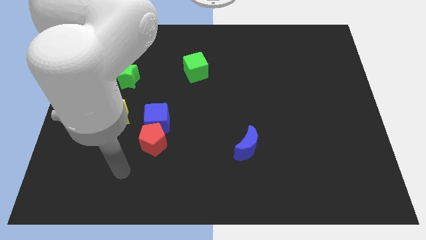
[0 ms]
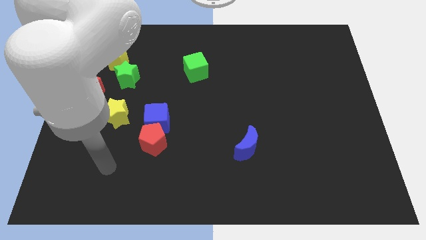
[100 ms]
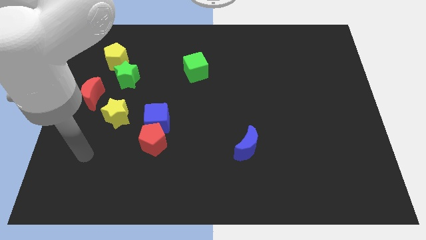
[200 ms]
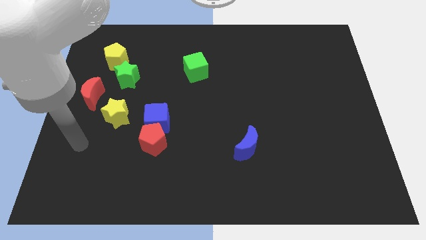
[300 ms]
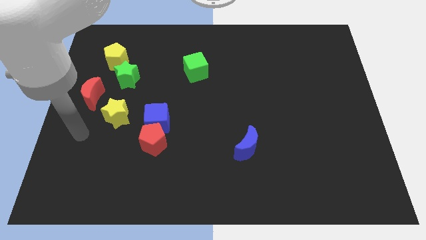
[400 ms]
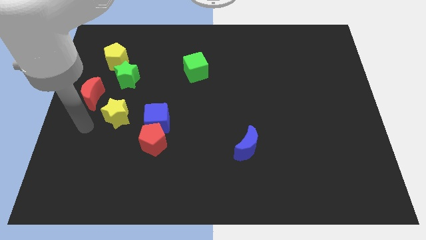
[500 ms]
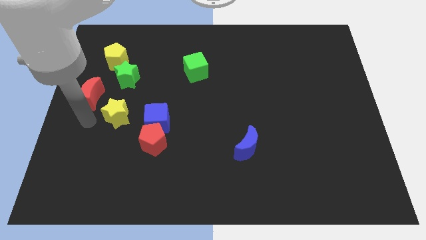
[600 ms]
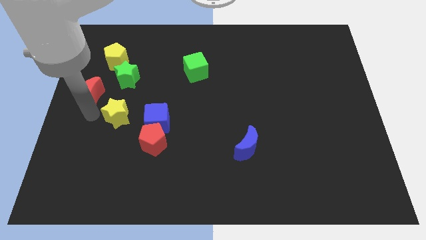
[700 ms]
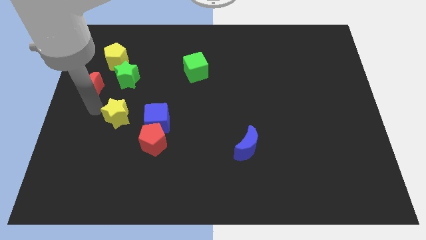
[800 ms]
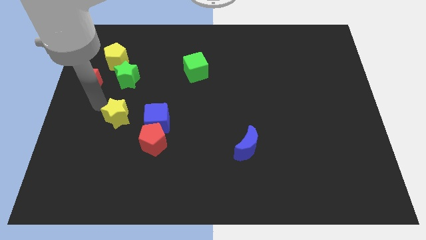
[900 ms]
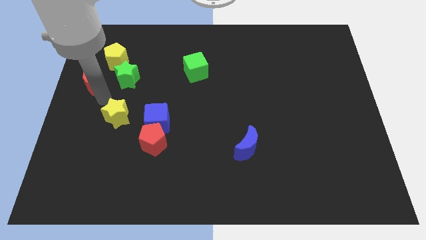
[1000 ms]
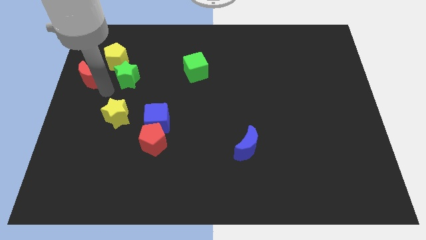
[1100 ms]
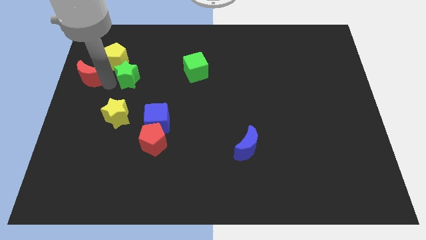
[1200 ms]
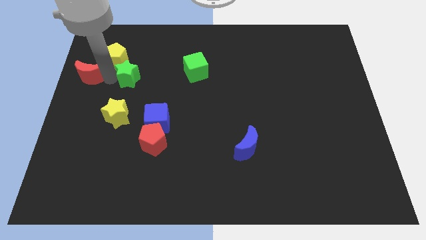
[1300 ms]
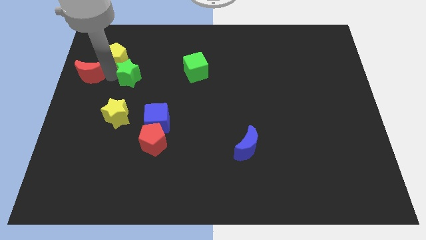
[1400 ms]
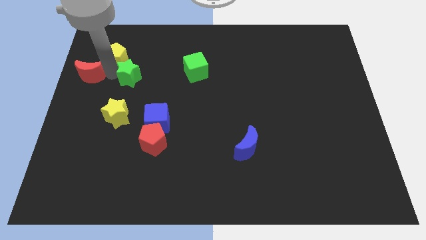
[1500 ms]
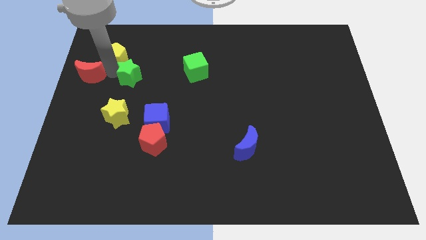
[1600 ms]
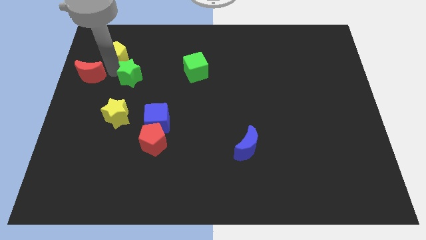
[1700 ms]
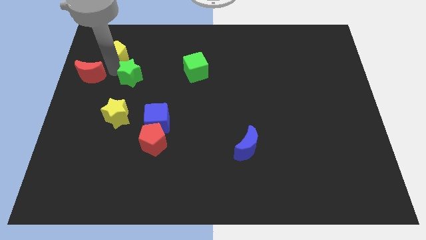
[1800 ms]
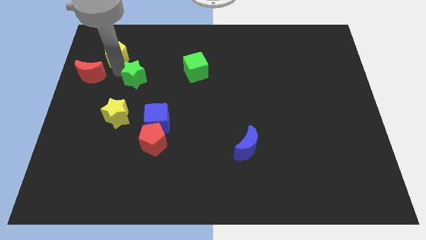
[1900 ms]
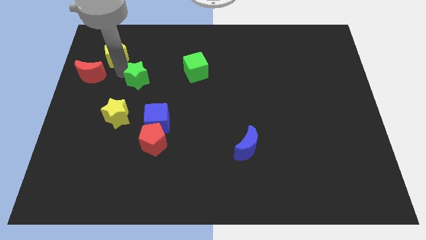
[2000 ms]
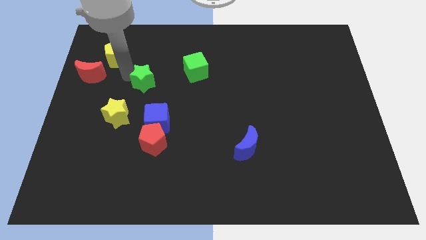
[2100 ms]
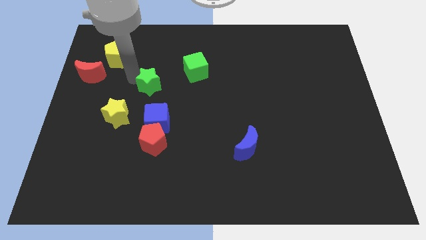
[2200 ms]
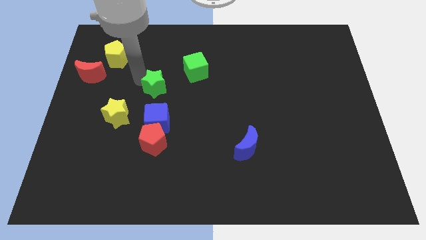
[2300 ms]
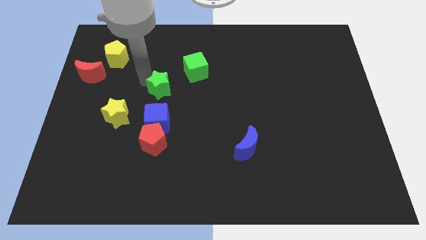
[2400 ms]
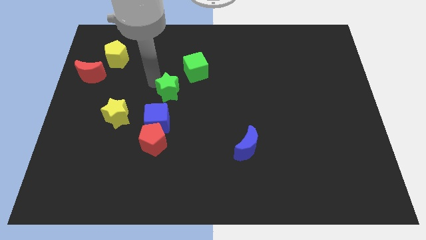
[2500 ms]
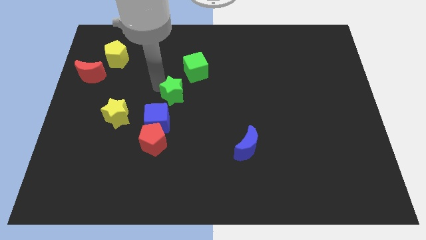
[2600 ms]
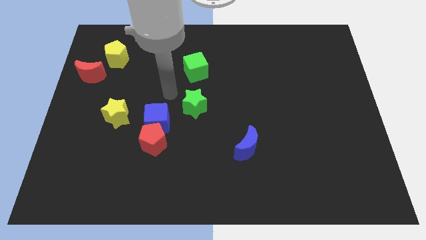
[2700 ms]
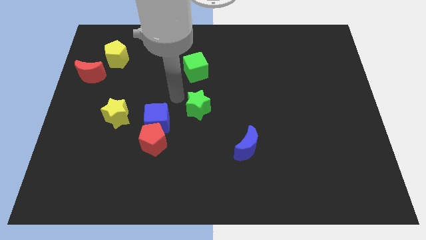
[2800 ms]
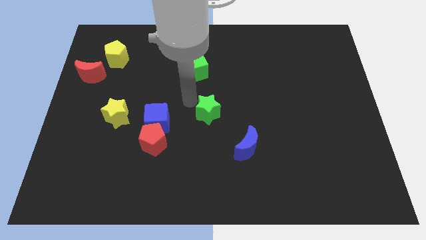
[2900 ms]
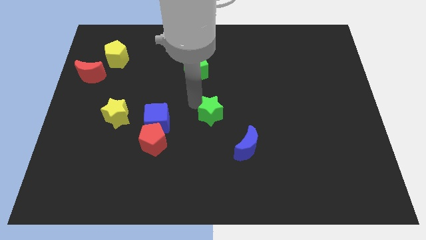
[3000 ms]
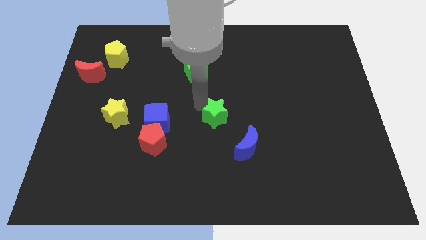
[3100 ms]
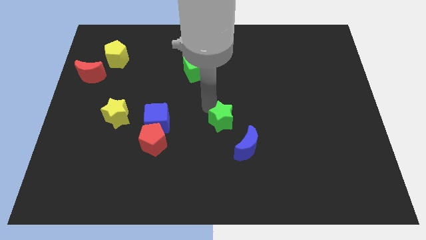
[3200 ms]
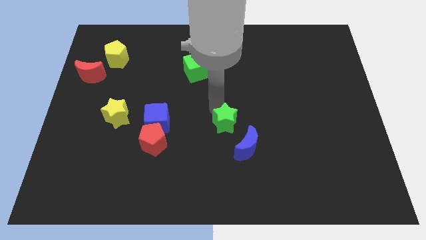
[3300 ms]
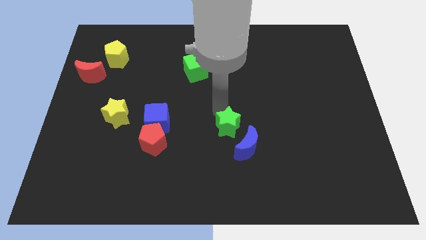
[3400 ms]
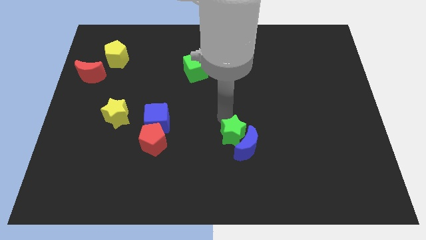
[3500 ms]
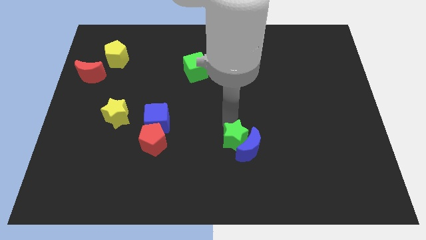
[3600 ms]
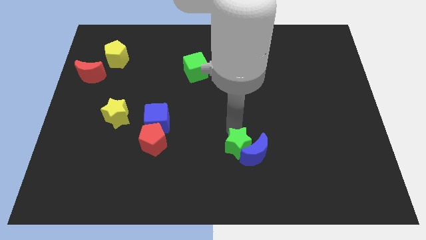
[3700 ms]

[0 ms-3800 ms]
put the green star next to the blue moon

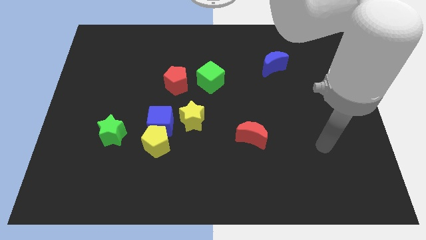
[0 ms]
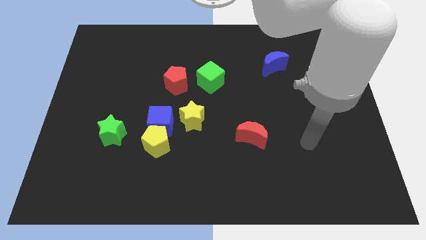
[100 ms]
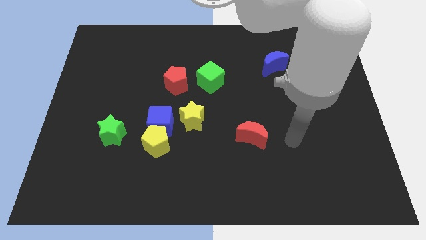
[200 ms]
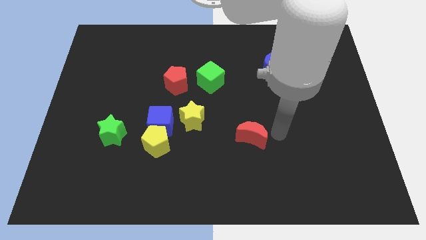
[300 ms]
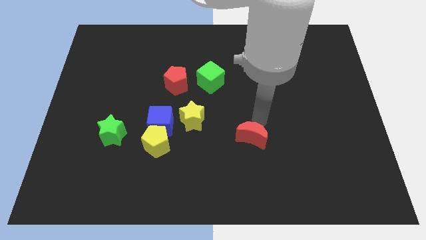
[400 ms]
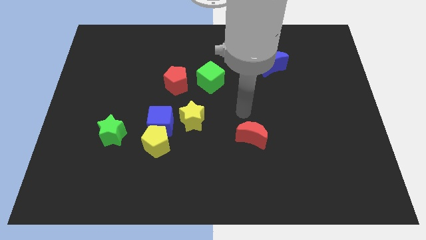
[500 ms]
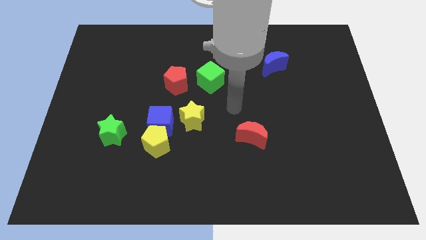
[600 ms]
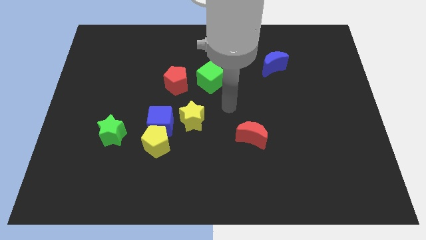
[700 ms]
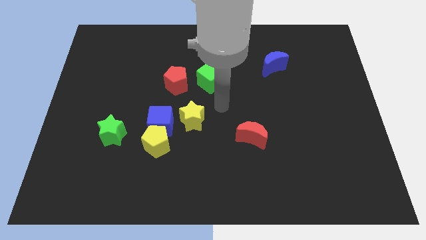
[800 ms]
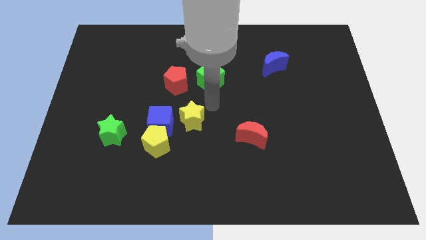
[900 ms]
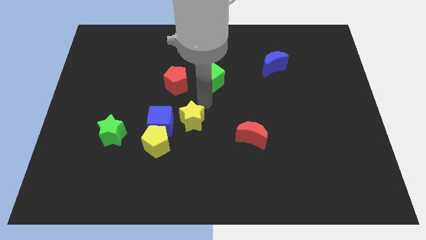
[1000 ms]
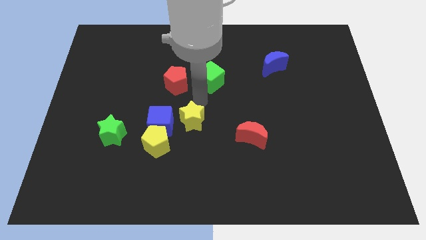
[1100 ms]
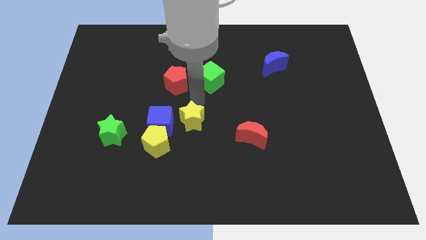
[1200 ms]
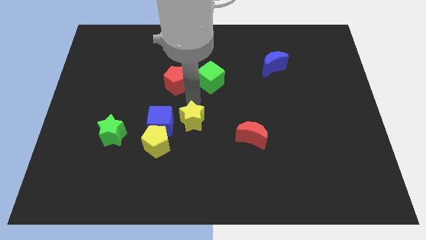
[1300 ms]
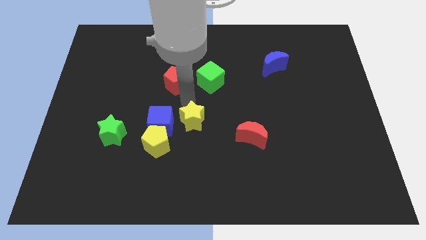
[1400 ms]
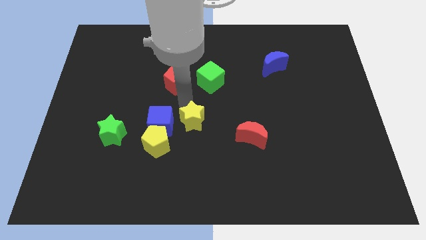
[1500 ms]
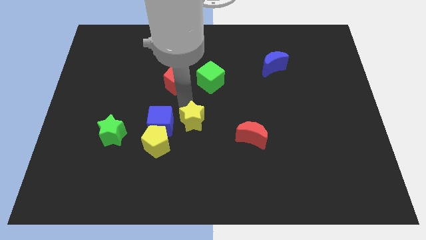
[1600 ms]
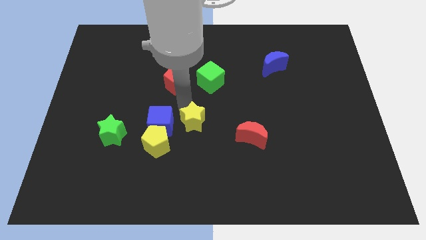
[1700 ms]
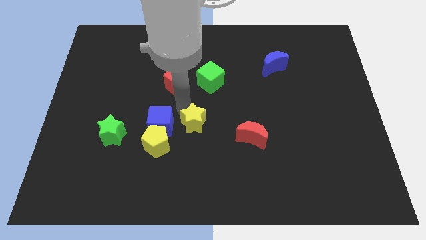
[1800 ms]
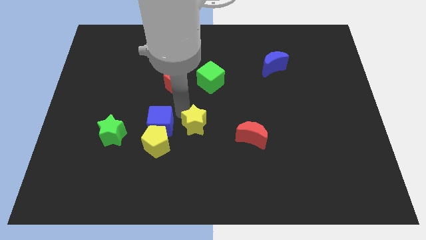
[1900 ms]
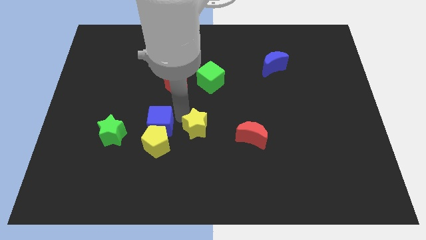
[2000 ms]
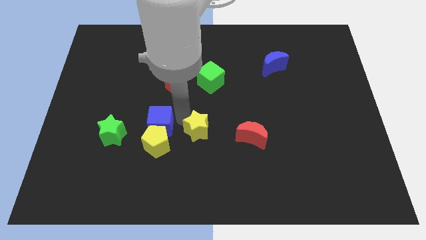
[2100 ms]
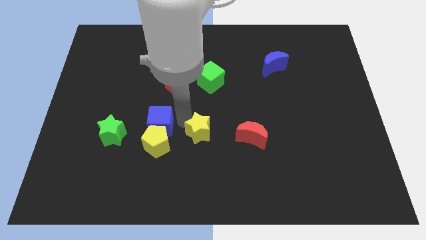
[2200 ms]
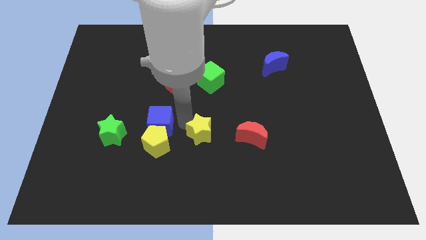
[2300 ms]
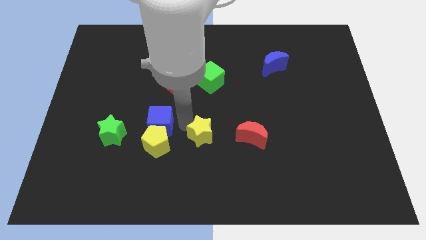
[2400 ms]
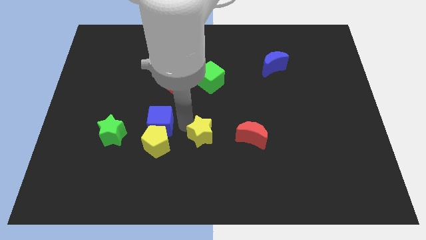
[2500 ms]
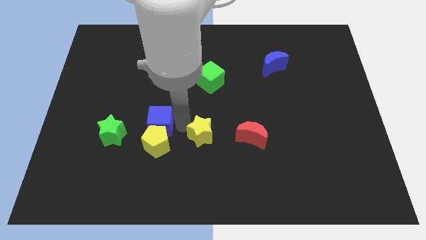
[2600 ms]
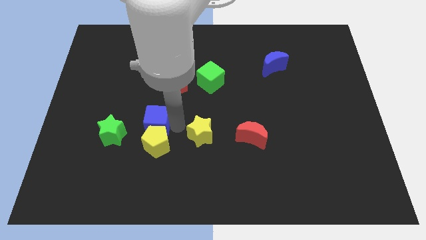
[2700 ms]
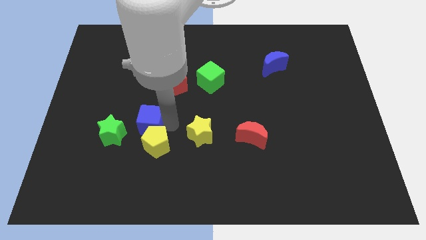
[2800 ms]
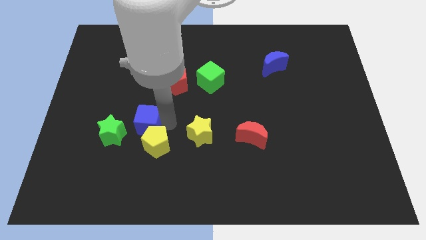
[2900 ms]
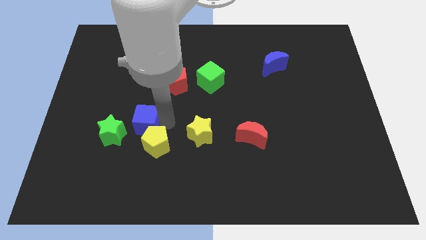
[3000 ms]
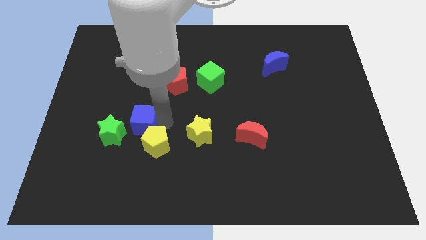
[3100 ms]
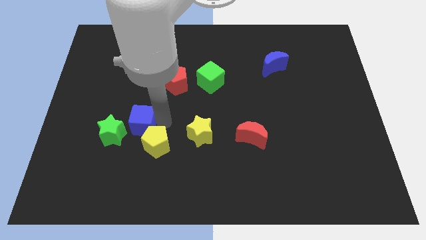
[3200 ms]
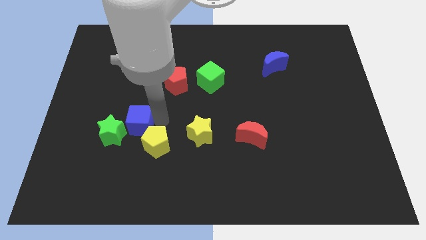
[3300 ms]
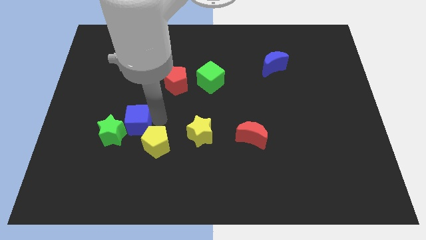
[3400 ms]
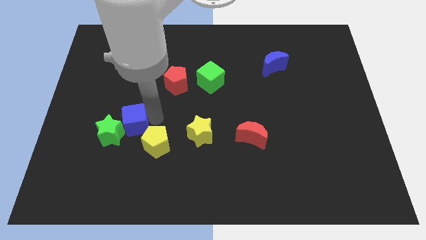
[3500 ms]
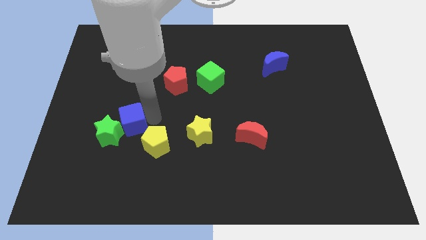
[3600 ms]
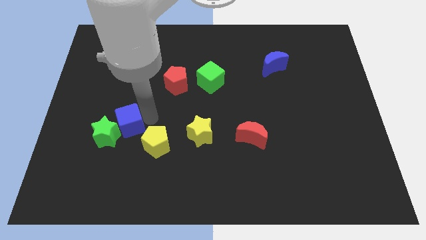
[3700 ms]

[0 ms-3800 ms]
push the blue cube close to the green star

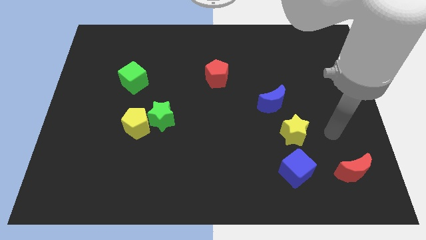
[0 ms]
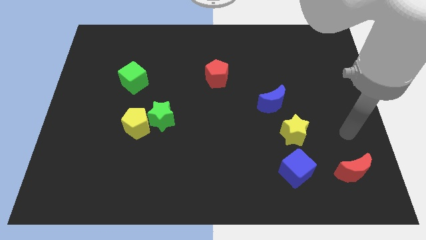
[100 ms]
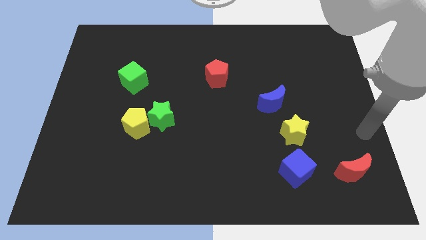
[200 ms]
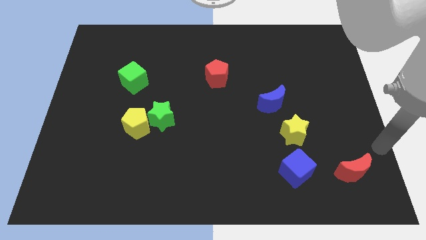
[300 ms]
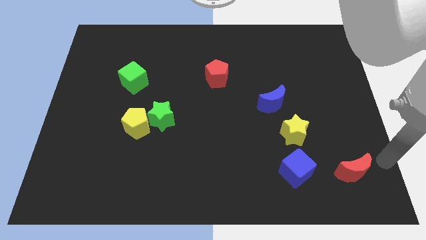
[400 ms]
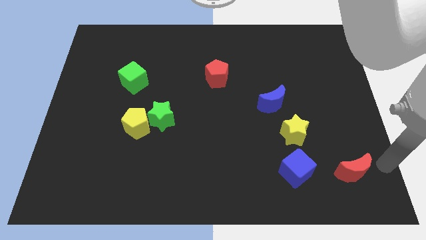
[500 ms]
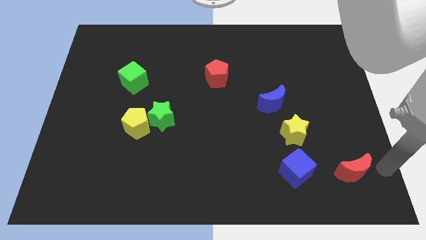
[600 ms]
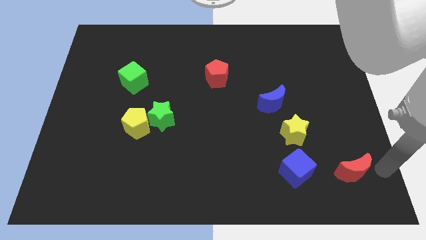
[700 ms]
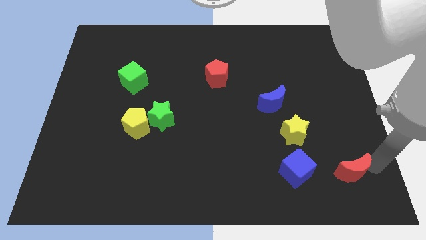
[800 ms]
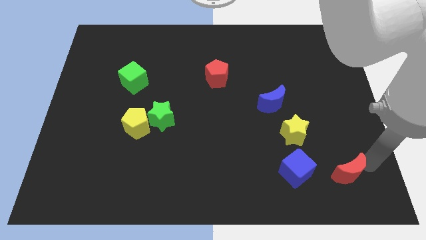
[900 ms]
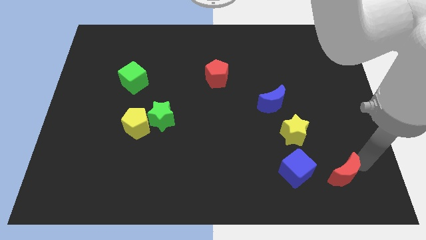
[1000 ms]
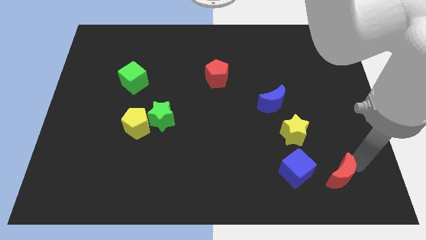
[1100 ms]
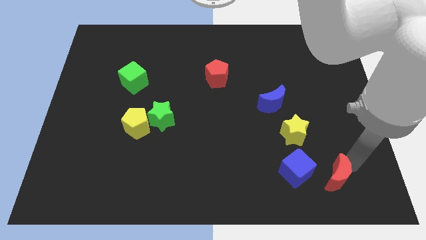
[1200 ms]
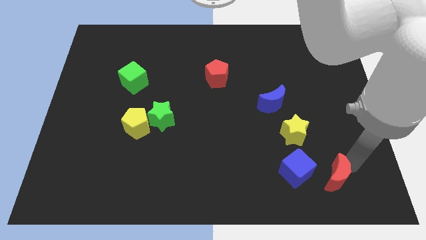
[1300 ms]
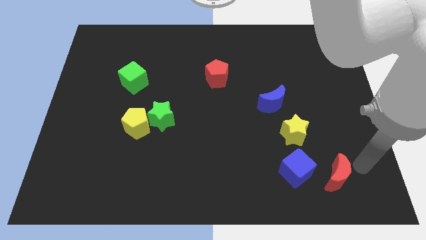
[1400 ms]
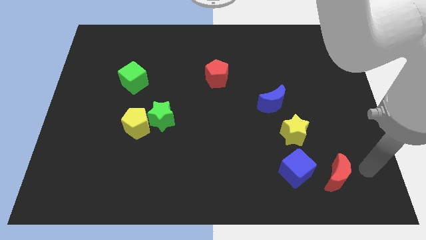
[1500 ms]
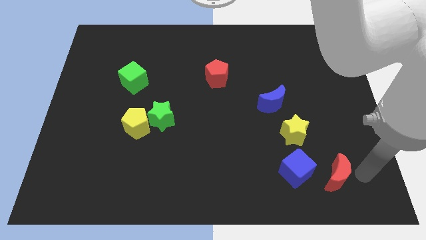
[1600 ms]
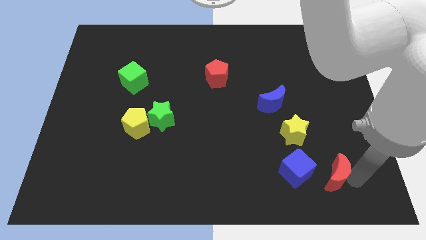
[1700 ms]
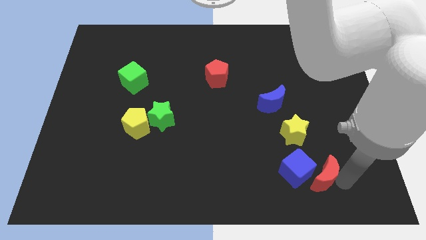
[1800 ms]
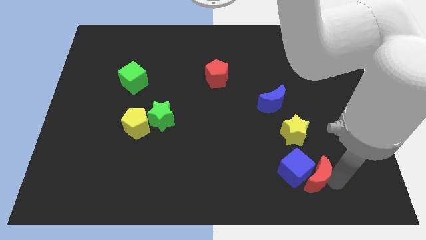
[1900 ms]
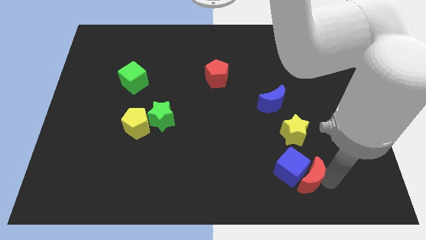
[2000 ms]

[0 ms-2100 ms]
push the red moon to the blue cube
